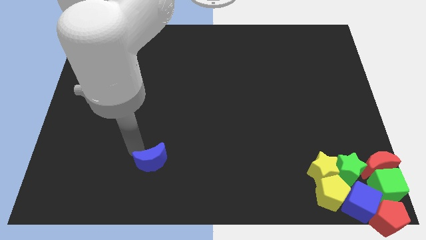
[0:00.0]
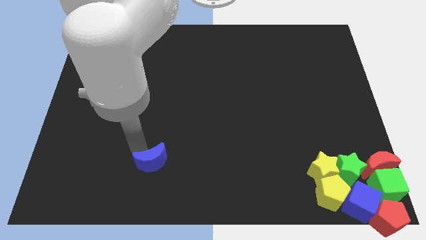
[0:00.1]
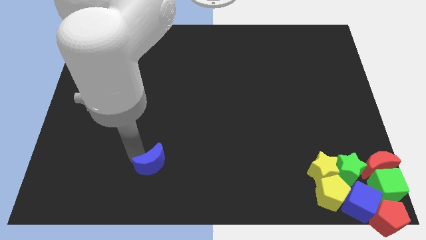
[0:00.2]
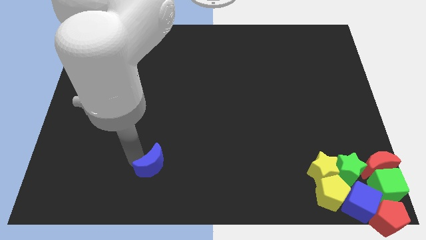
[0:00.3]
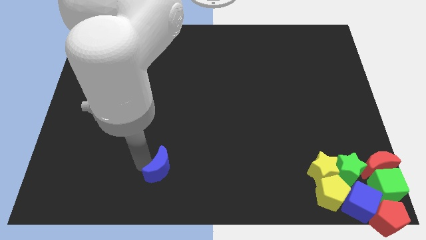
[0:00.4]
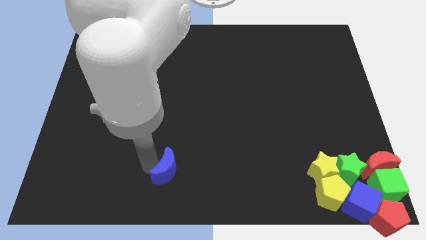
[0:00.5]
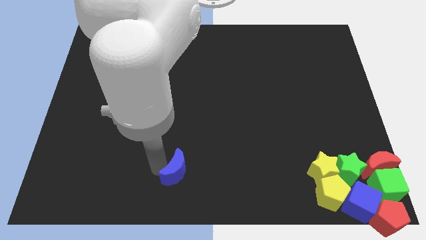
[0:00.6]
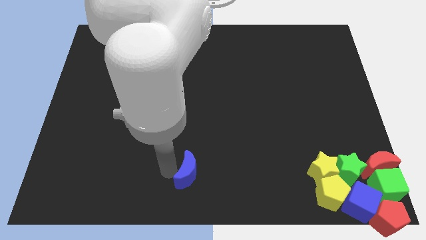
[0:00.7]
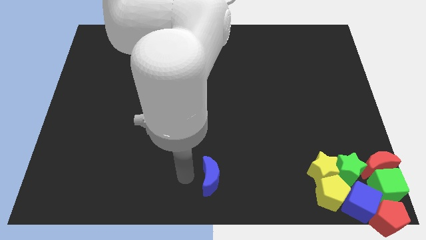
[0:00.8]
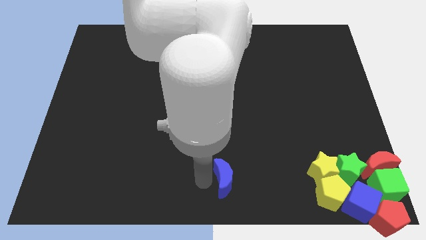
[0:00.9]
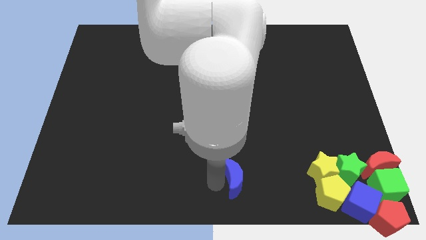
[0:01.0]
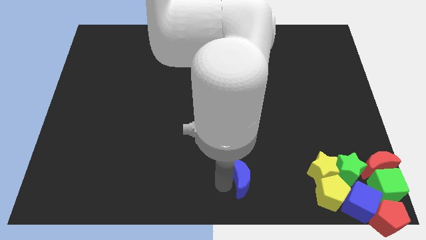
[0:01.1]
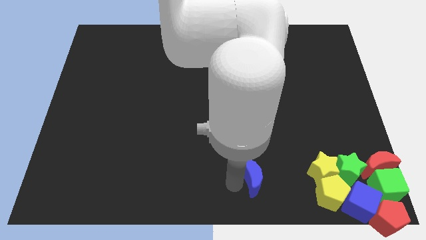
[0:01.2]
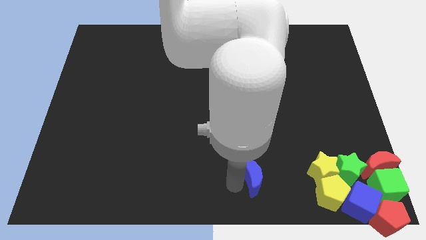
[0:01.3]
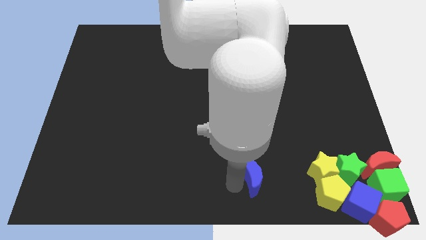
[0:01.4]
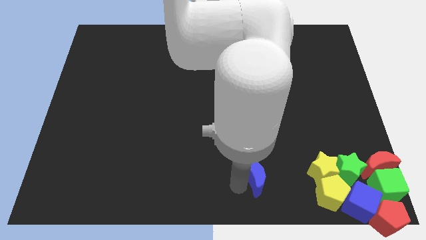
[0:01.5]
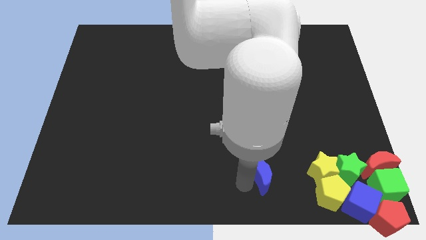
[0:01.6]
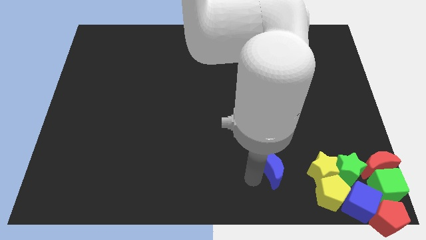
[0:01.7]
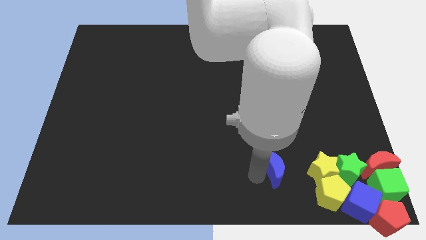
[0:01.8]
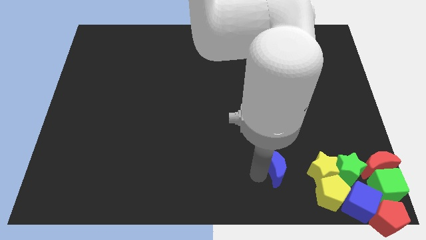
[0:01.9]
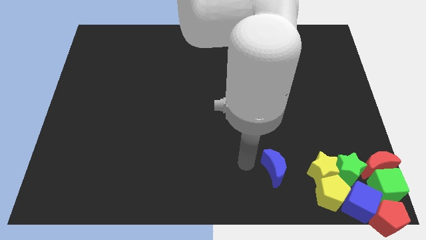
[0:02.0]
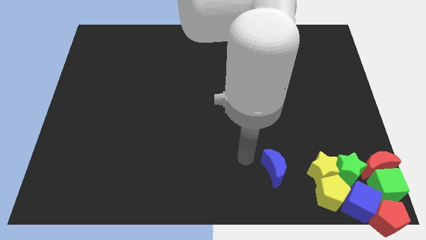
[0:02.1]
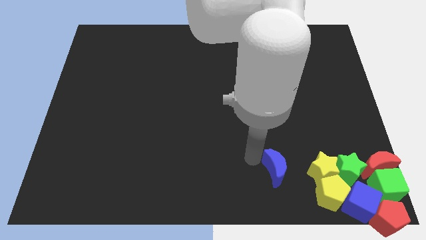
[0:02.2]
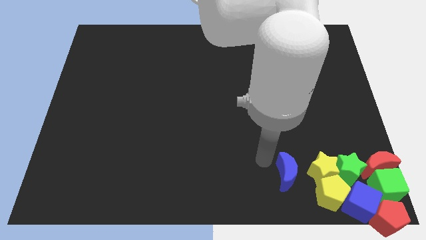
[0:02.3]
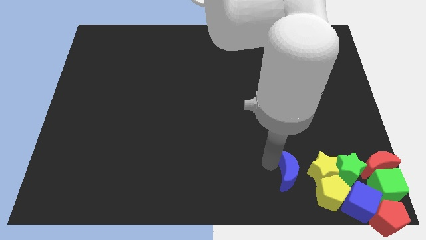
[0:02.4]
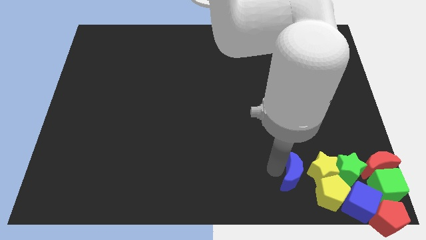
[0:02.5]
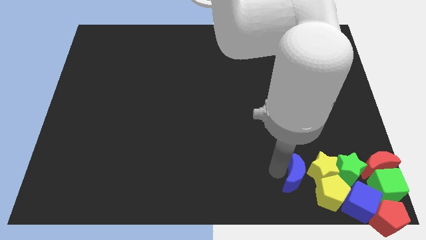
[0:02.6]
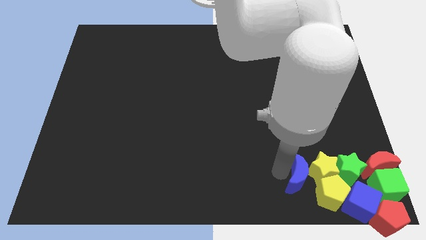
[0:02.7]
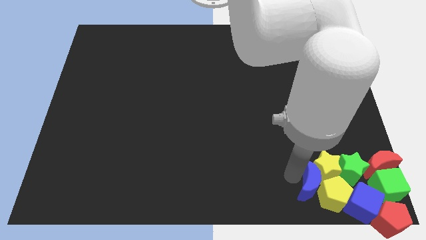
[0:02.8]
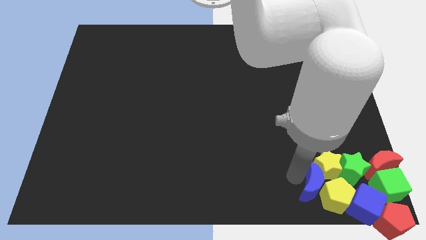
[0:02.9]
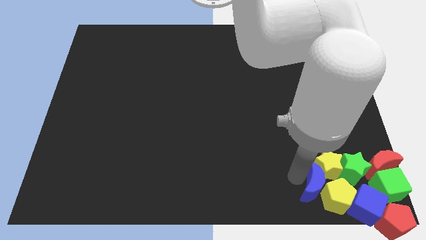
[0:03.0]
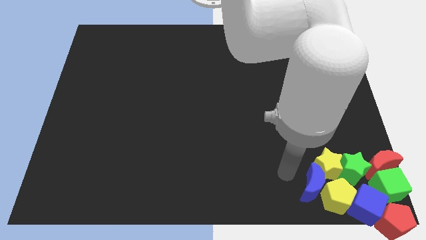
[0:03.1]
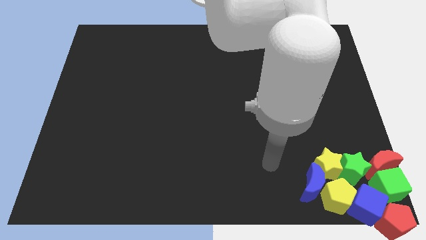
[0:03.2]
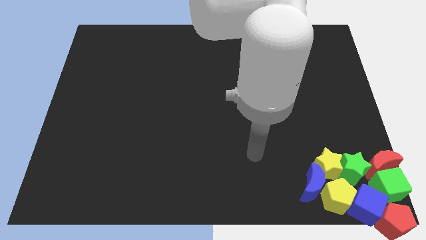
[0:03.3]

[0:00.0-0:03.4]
move blue crescent into yellow blocks

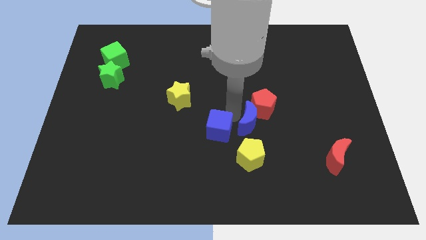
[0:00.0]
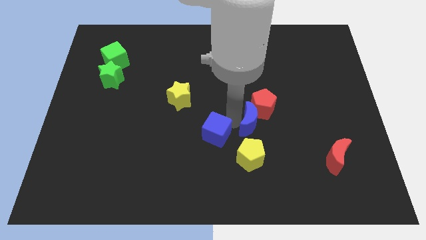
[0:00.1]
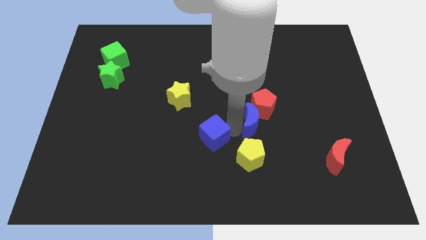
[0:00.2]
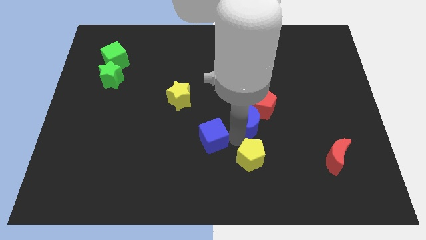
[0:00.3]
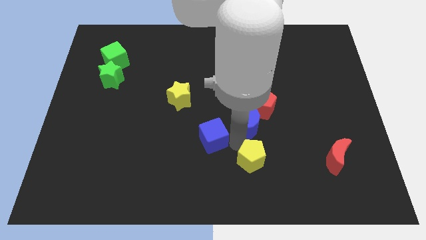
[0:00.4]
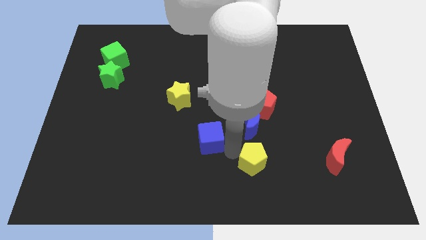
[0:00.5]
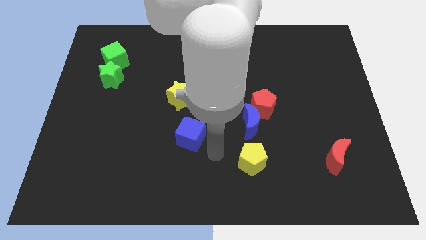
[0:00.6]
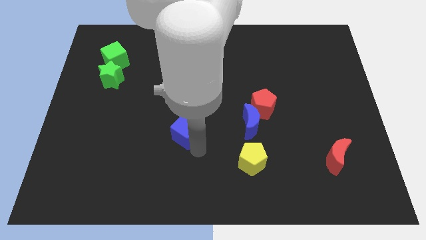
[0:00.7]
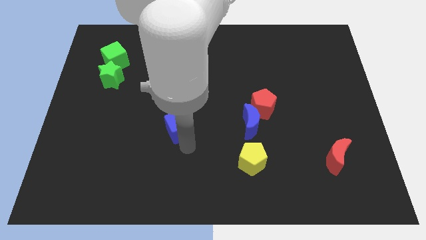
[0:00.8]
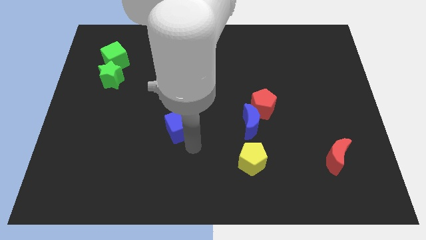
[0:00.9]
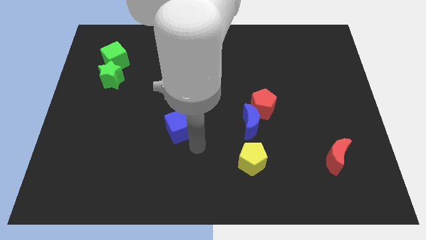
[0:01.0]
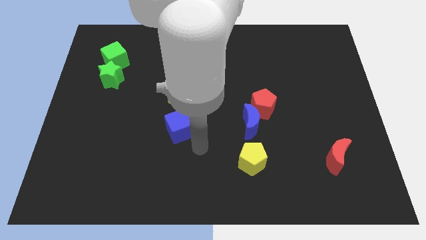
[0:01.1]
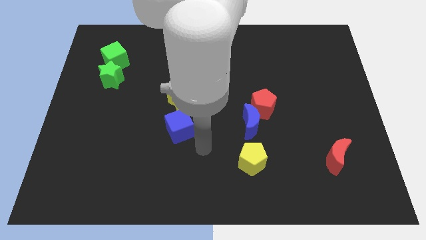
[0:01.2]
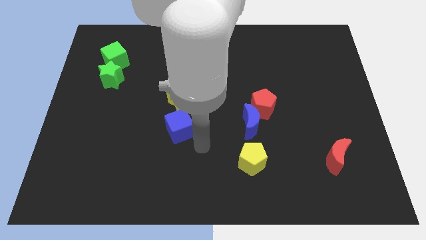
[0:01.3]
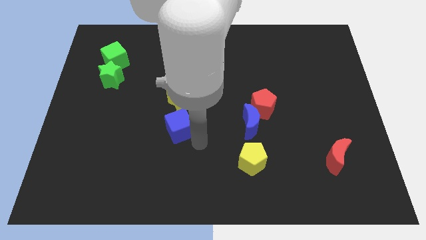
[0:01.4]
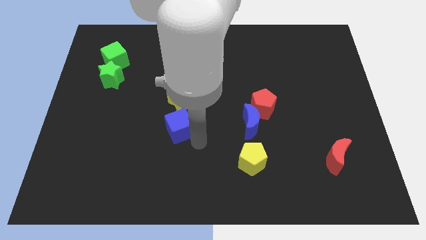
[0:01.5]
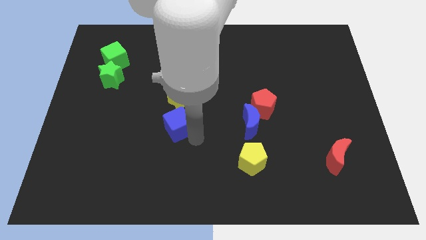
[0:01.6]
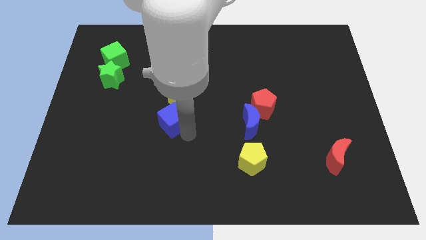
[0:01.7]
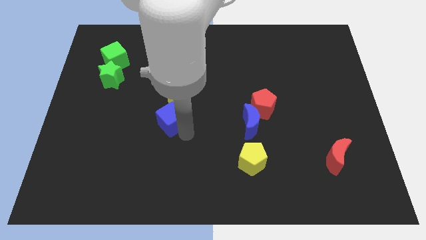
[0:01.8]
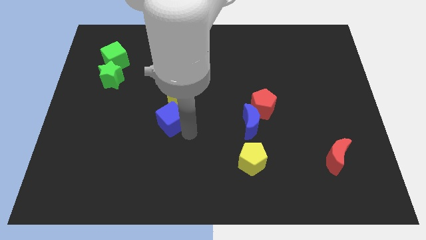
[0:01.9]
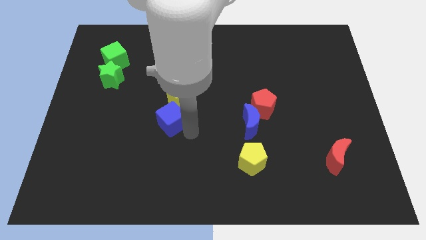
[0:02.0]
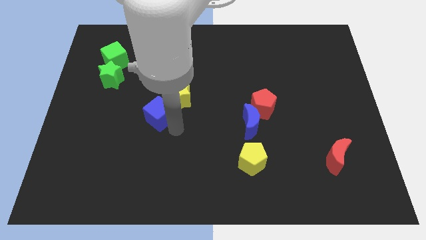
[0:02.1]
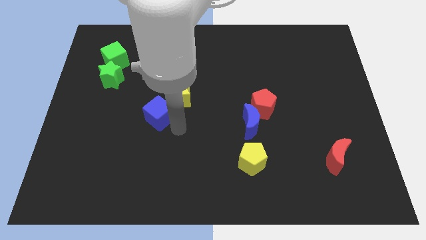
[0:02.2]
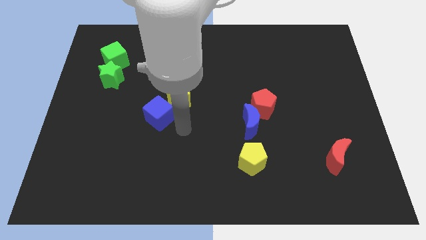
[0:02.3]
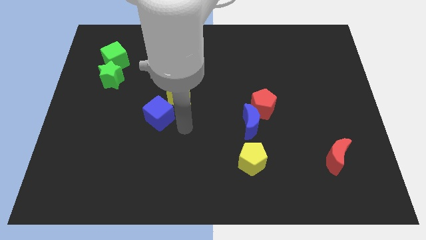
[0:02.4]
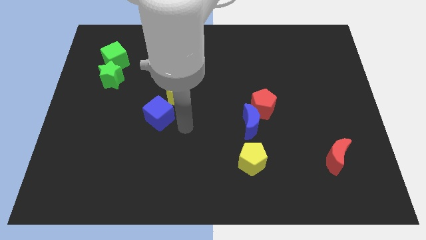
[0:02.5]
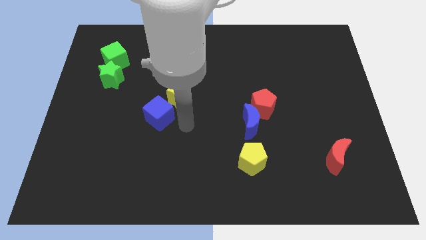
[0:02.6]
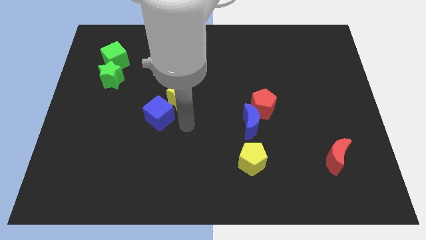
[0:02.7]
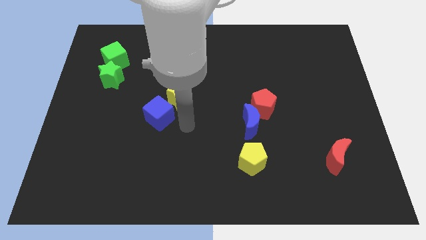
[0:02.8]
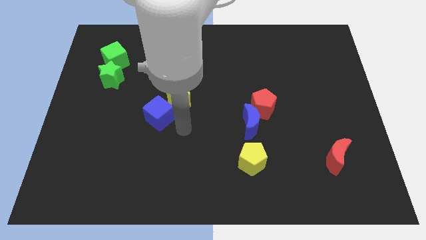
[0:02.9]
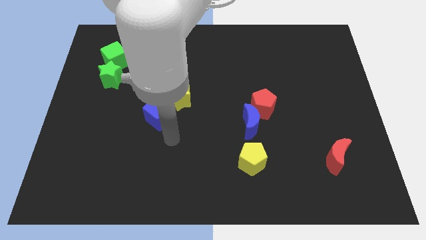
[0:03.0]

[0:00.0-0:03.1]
place blue cube to the bottom left of yellow star

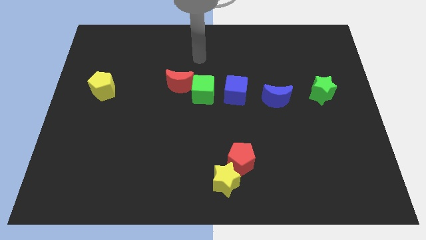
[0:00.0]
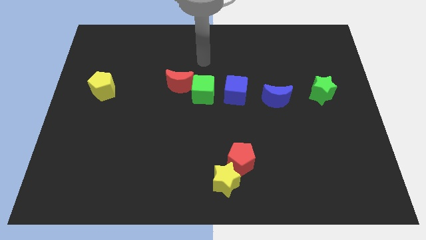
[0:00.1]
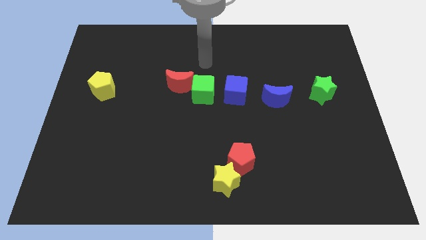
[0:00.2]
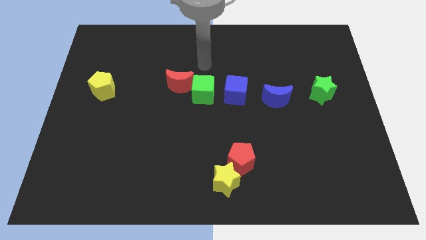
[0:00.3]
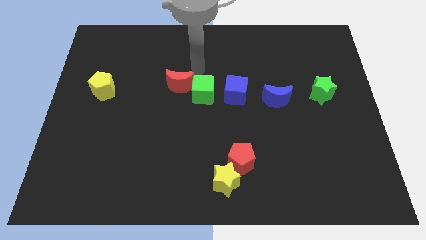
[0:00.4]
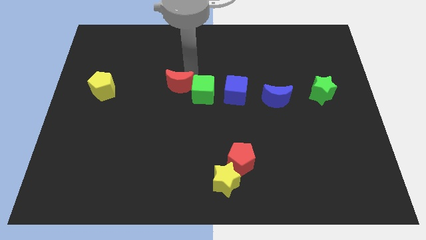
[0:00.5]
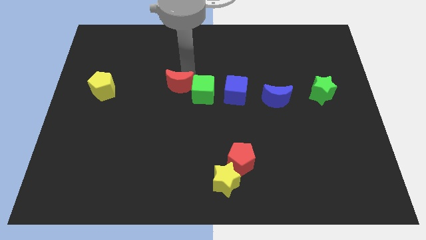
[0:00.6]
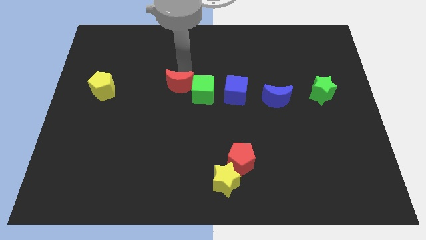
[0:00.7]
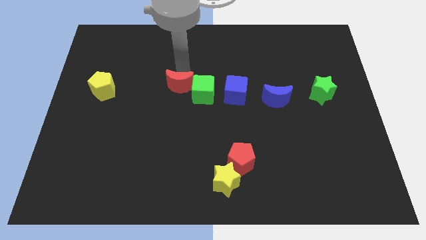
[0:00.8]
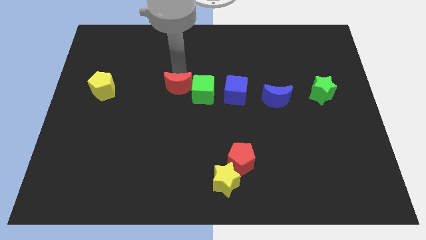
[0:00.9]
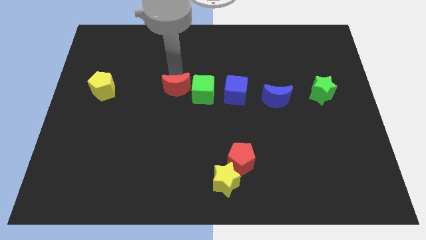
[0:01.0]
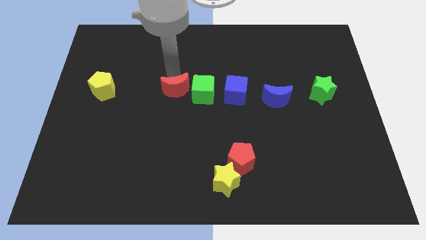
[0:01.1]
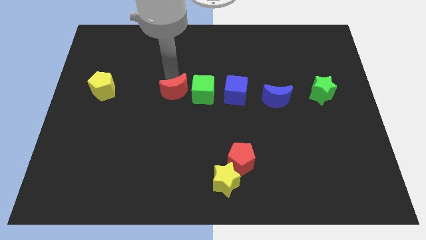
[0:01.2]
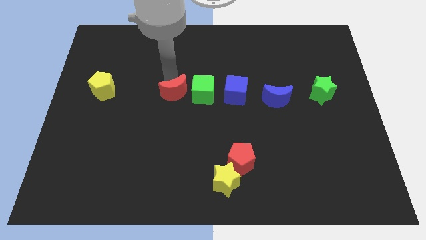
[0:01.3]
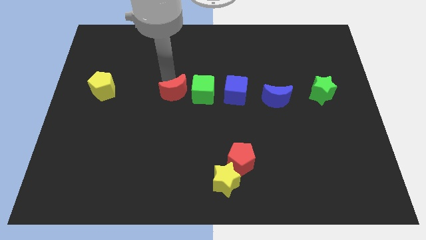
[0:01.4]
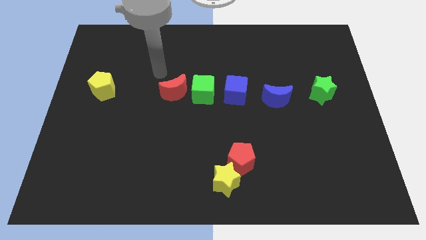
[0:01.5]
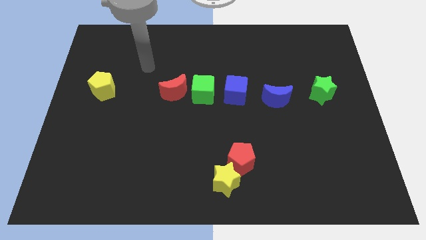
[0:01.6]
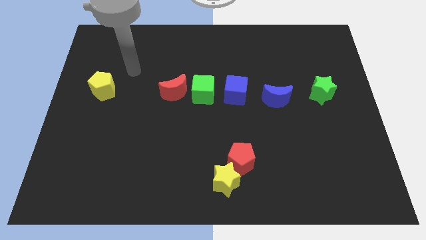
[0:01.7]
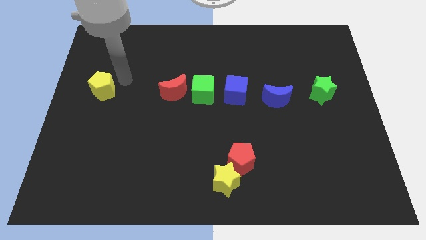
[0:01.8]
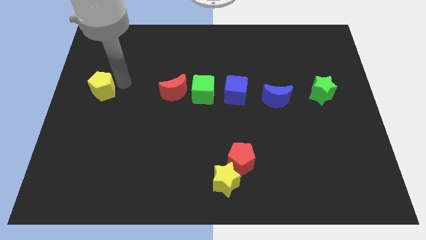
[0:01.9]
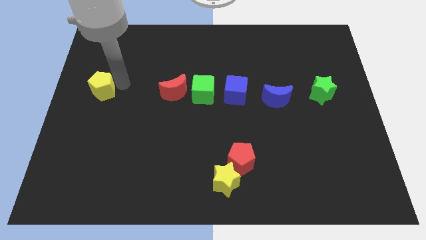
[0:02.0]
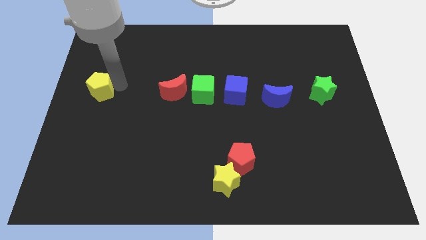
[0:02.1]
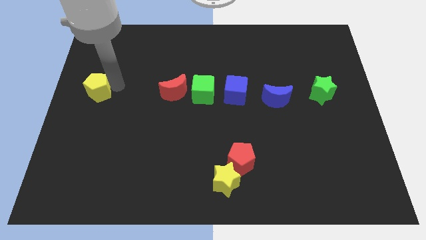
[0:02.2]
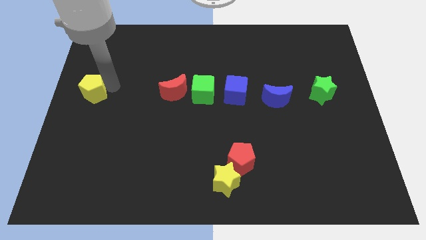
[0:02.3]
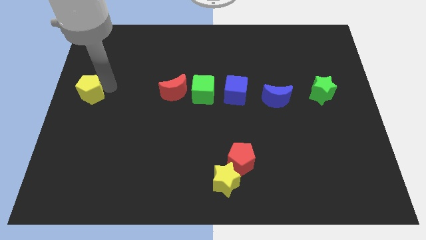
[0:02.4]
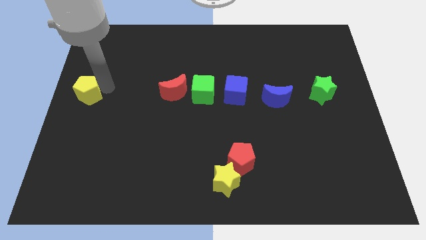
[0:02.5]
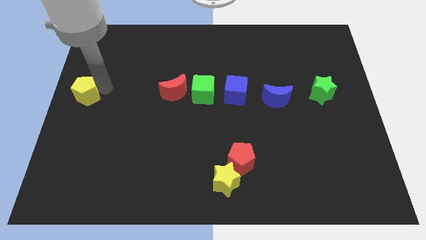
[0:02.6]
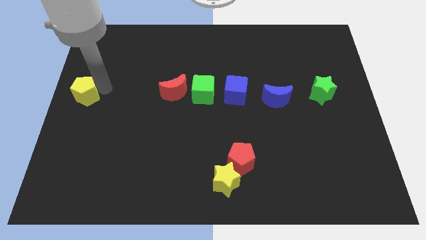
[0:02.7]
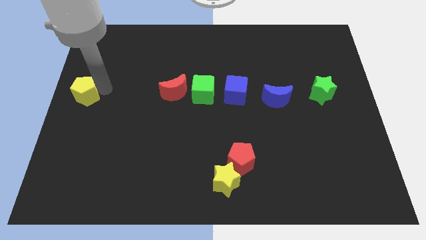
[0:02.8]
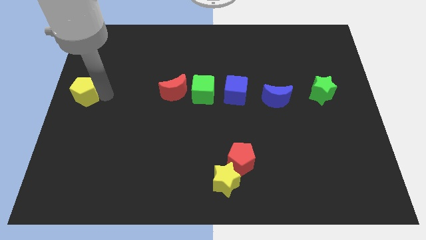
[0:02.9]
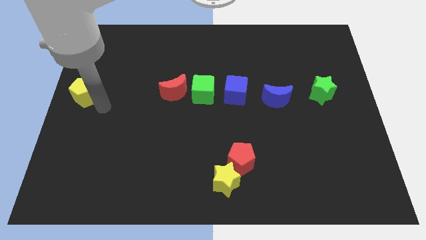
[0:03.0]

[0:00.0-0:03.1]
place the yellow pentagon to the middle left of the board
